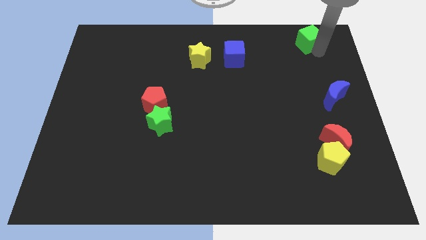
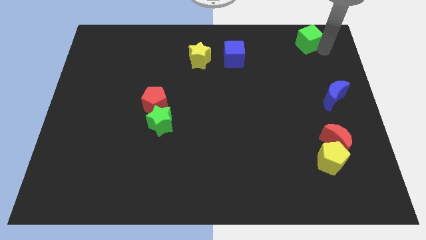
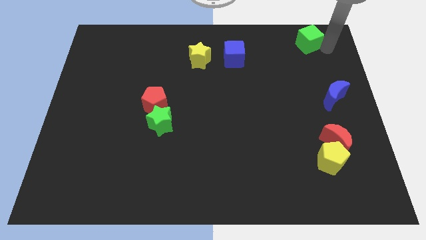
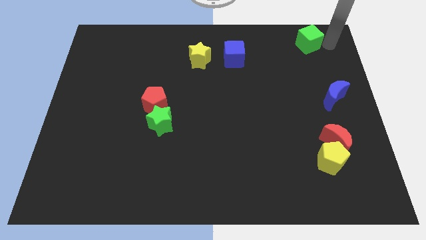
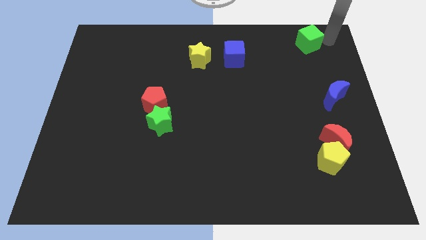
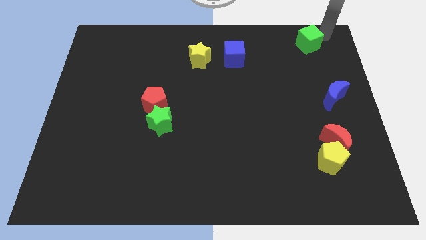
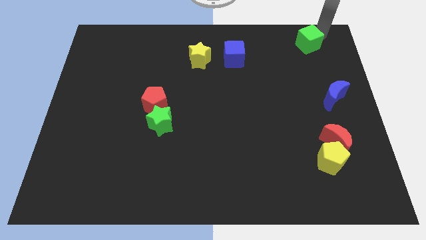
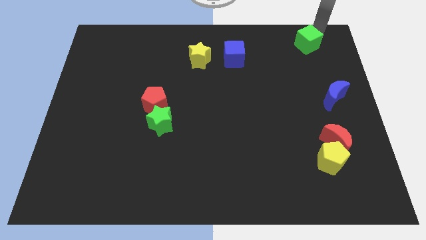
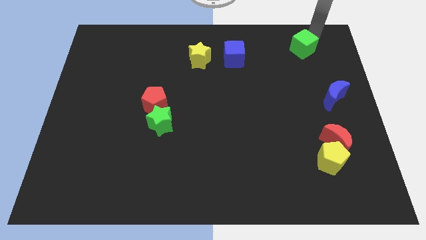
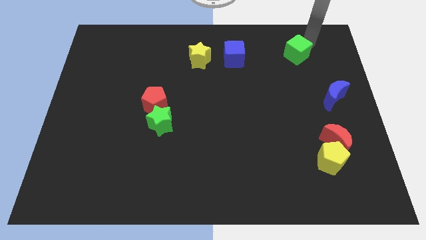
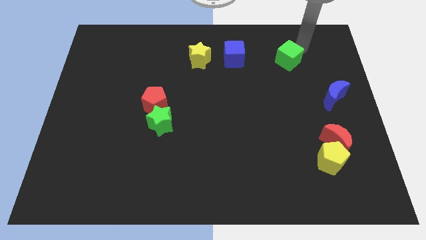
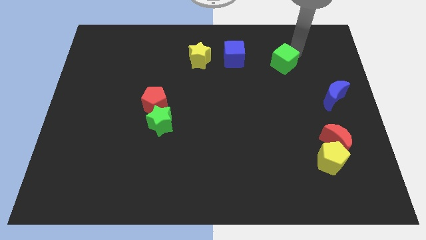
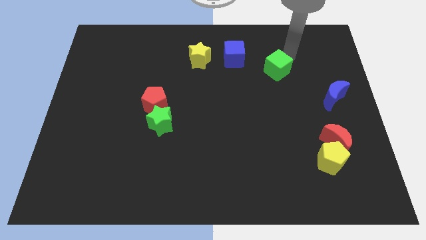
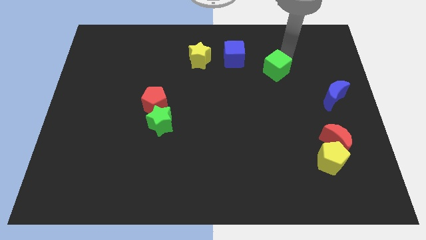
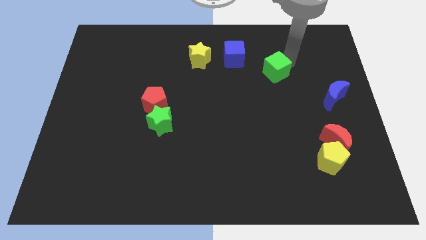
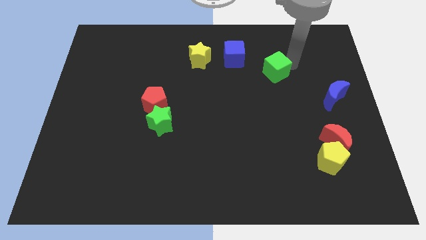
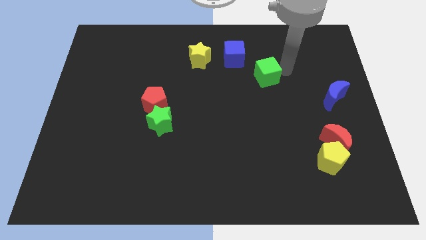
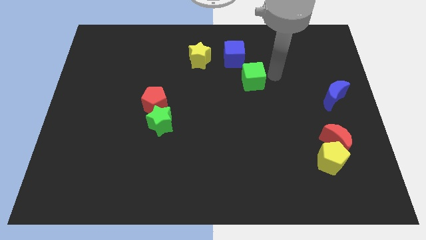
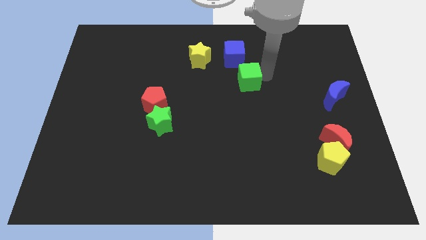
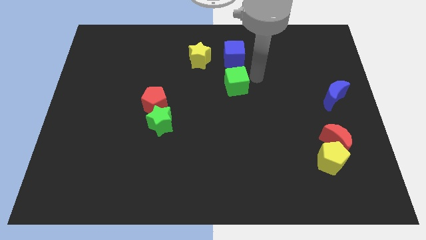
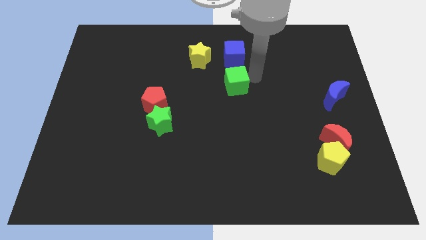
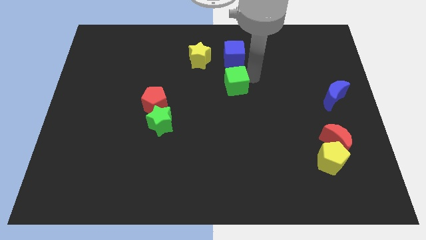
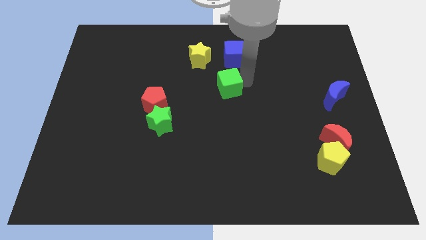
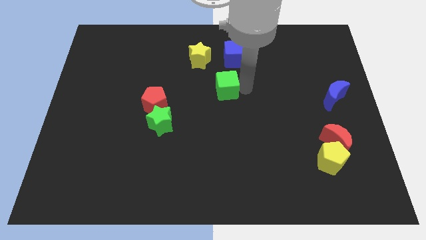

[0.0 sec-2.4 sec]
place the green cube below the blue cube

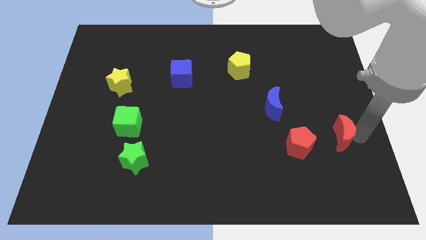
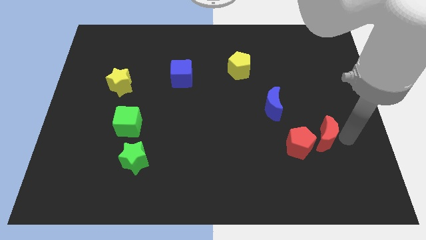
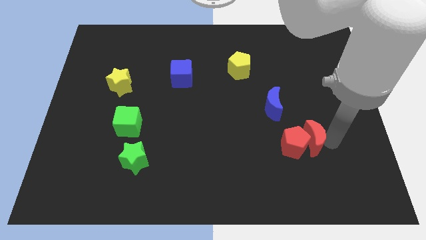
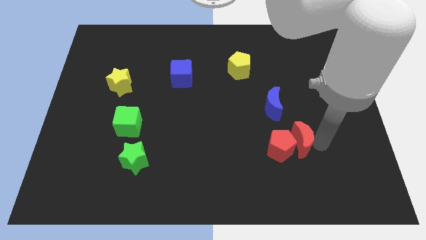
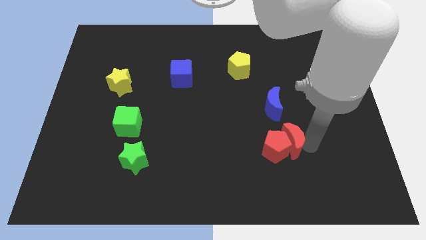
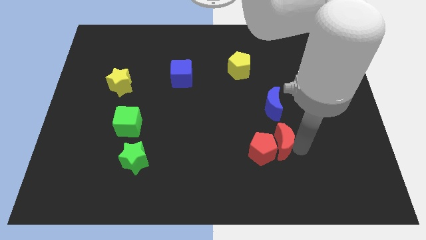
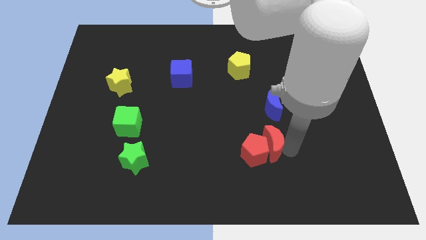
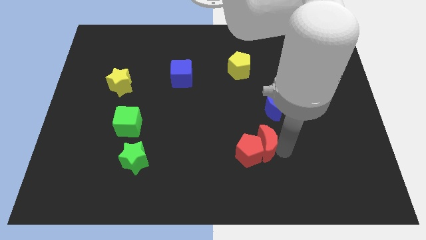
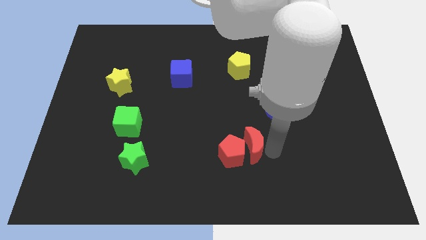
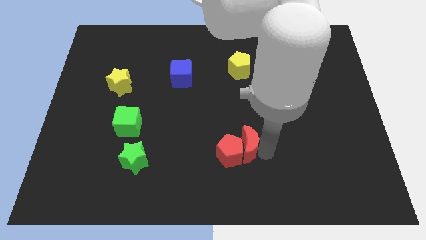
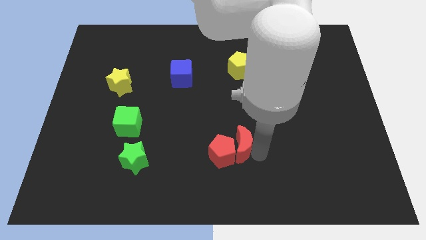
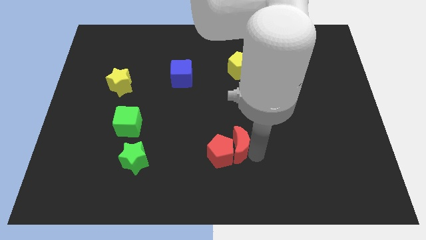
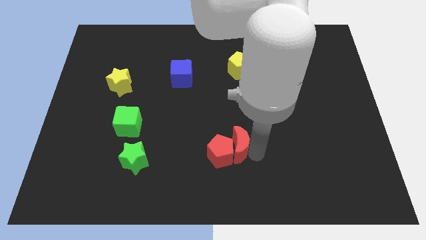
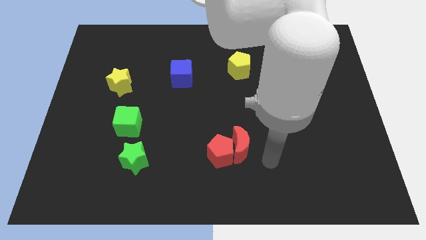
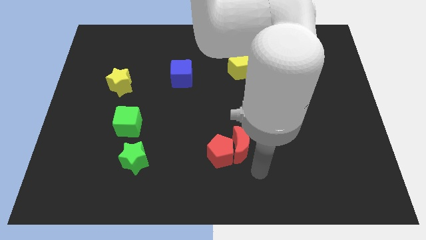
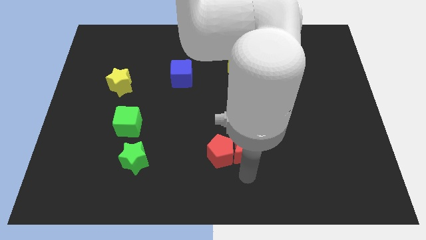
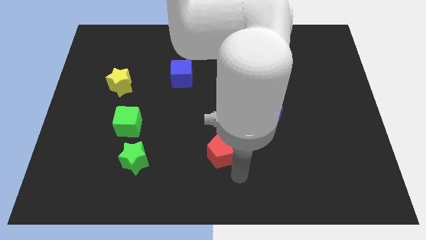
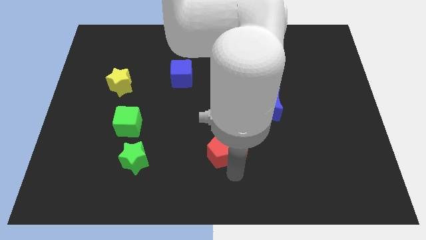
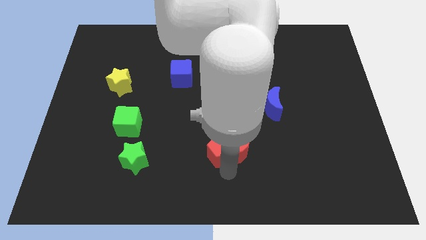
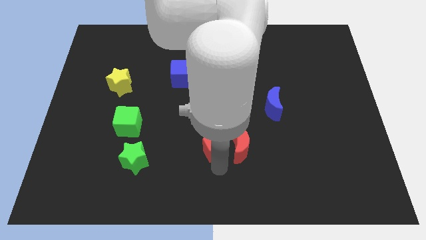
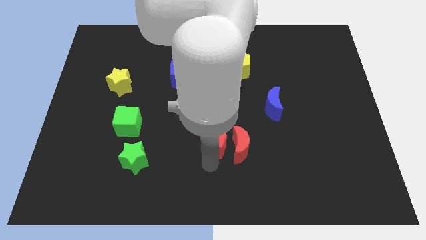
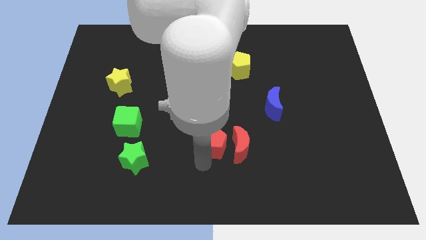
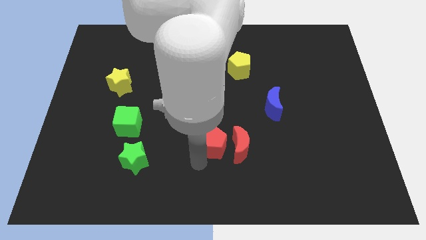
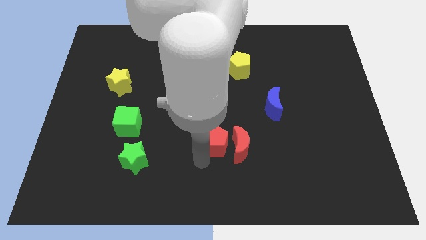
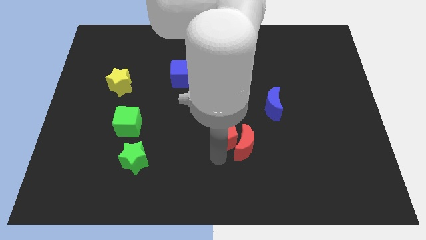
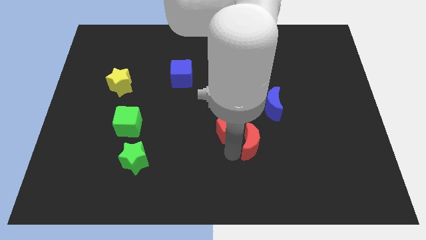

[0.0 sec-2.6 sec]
move the red blocks to the left side

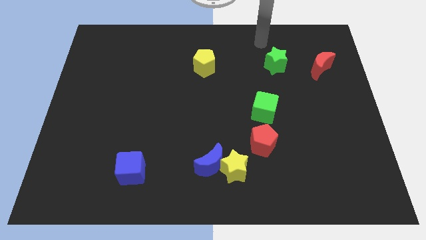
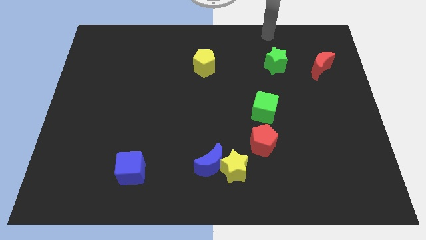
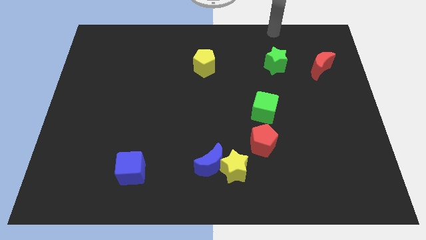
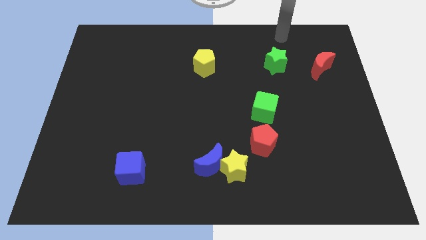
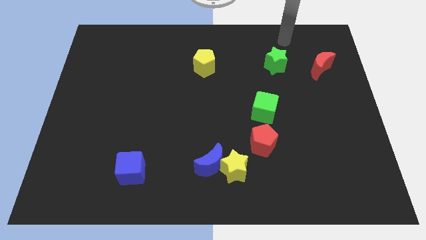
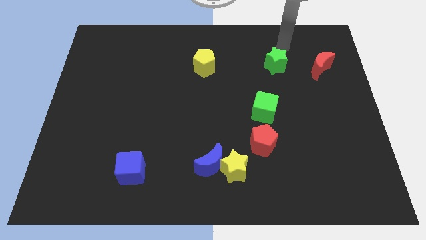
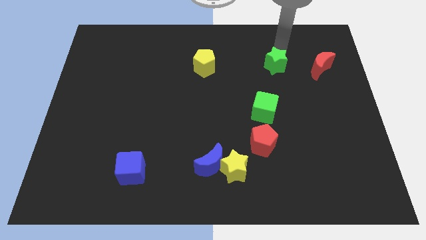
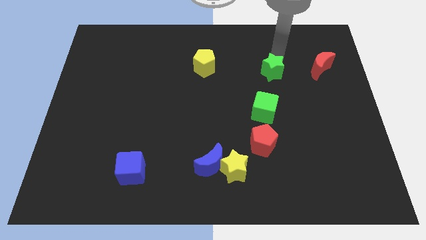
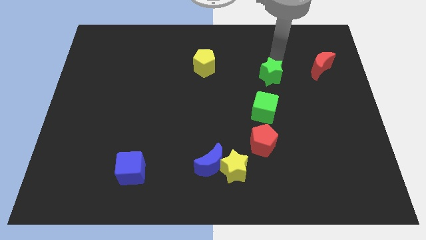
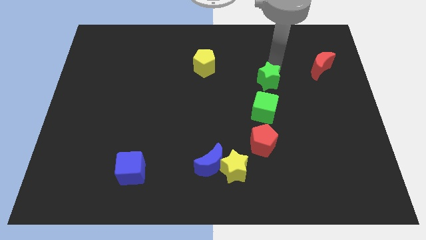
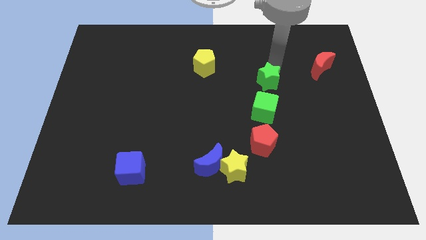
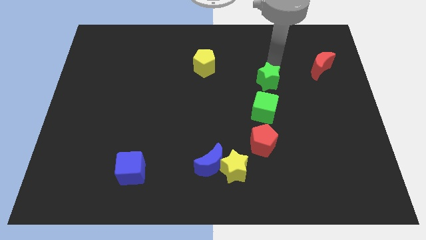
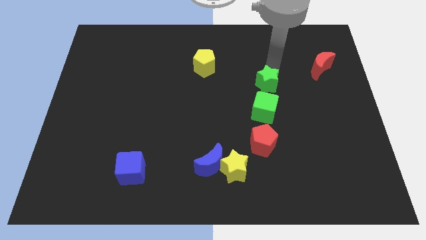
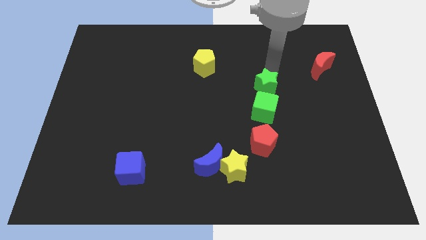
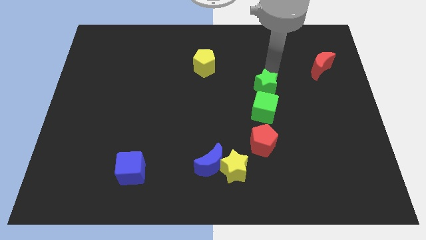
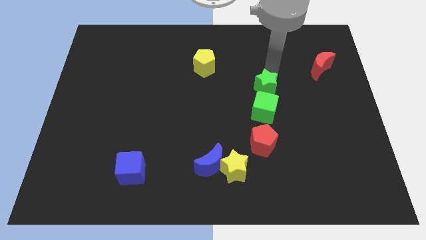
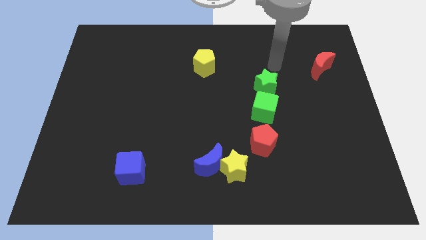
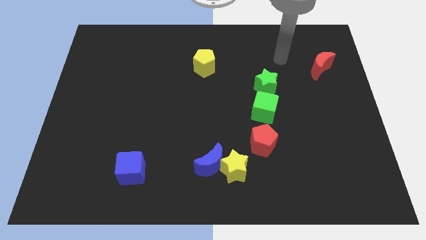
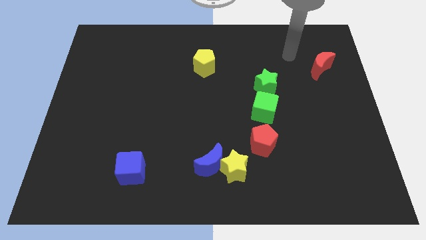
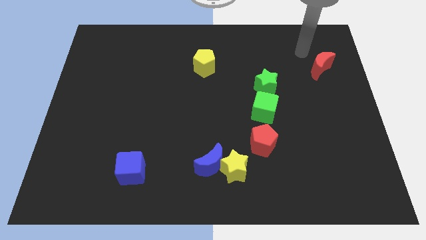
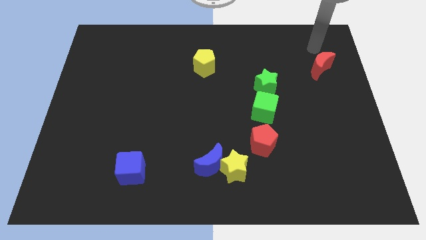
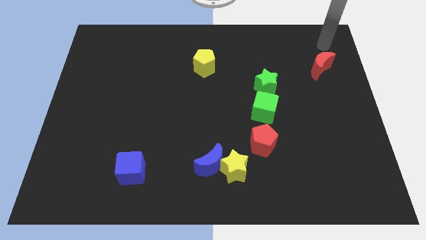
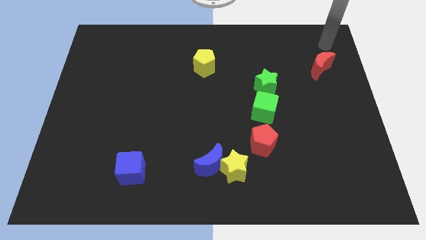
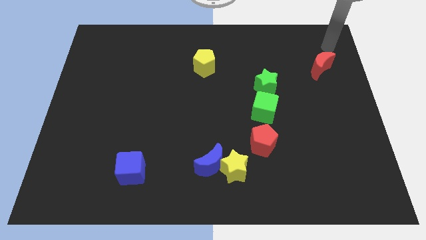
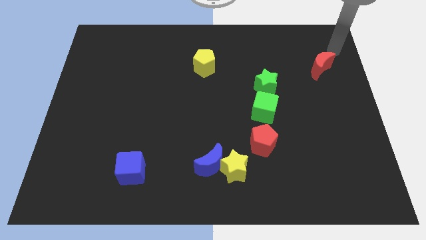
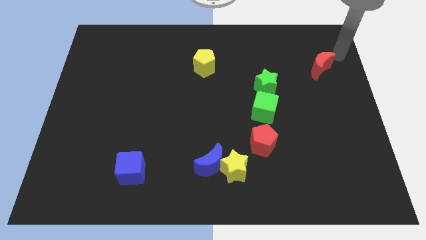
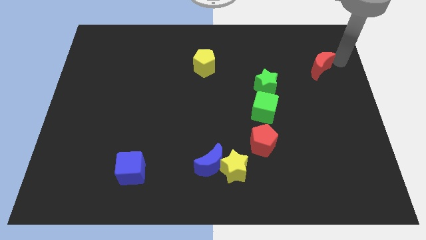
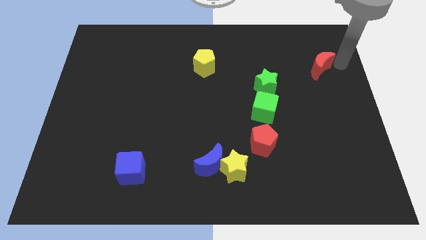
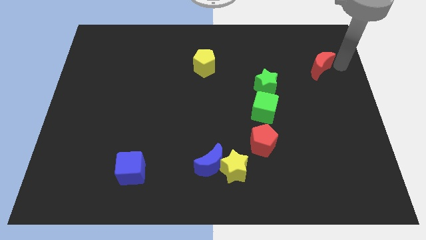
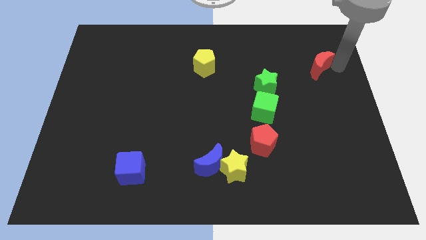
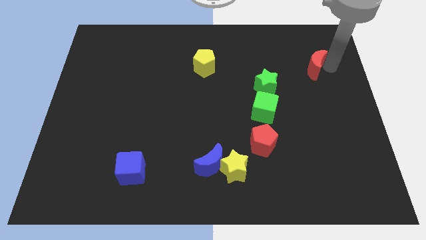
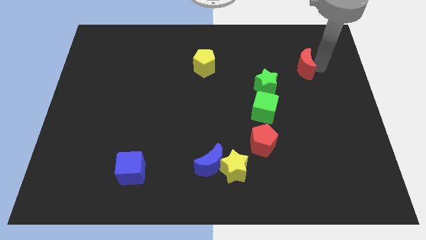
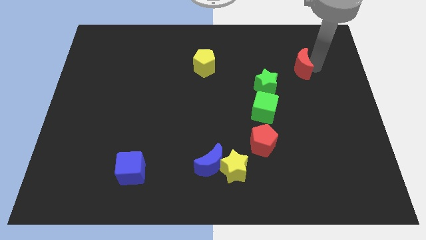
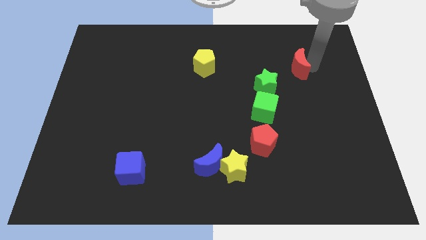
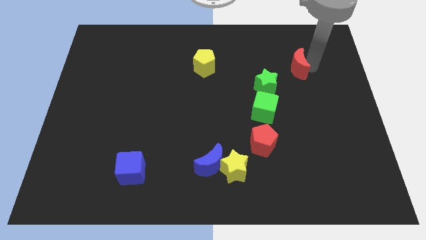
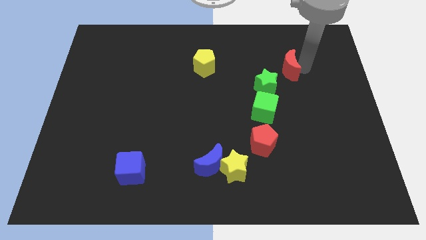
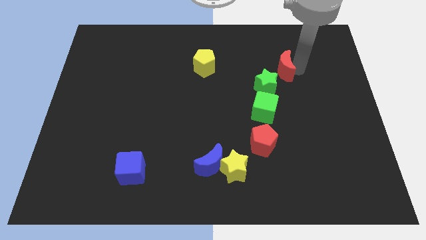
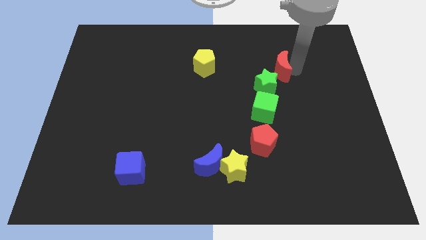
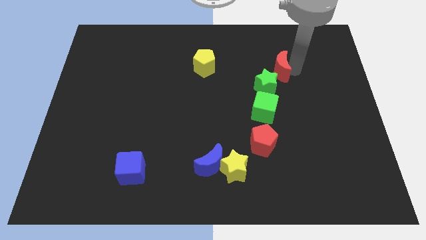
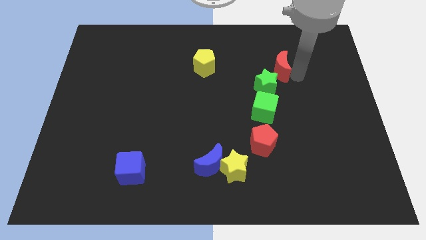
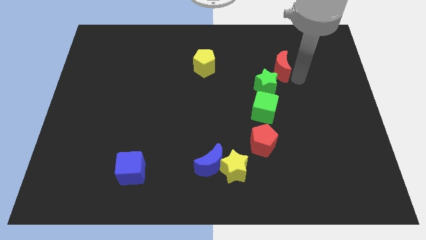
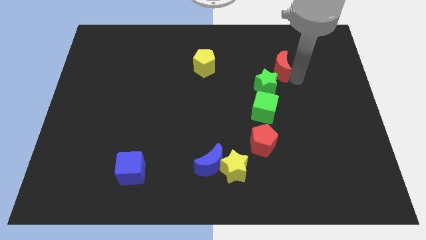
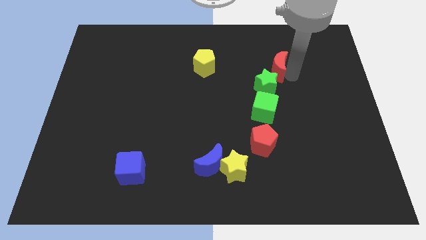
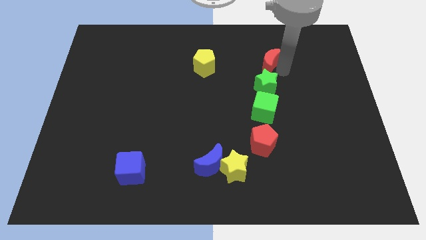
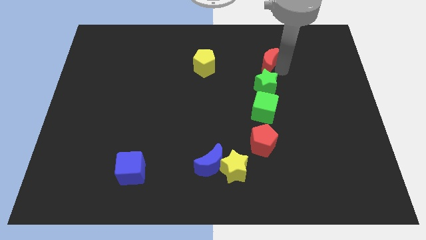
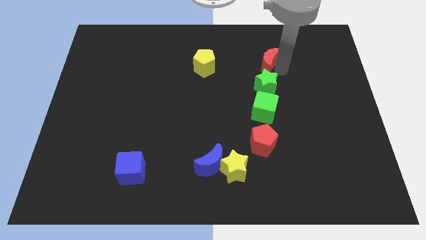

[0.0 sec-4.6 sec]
move the red moon above the gree star
